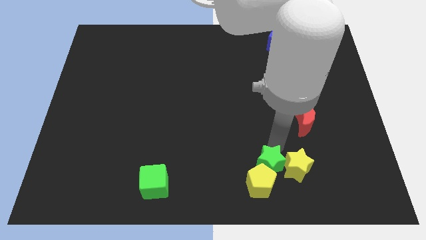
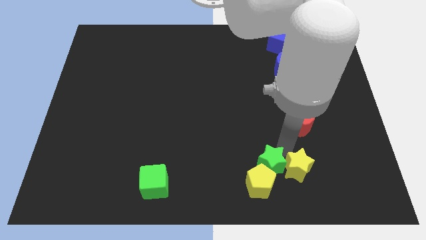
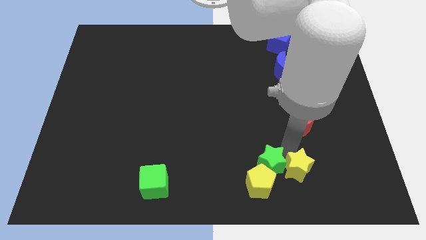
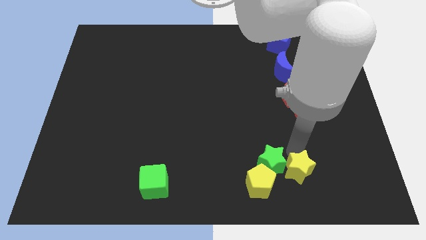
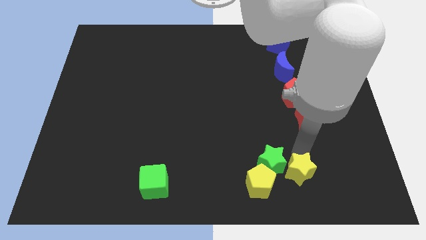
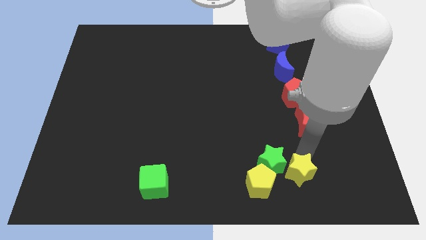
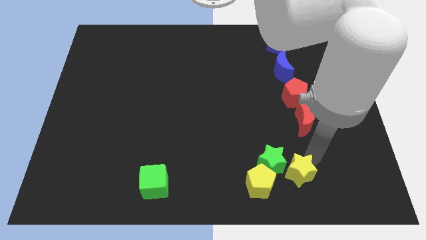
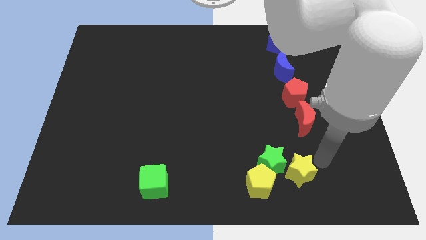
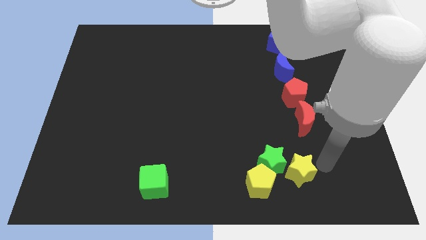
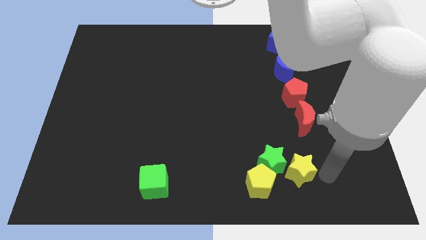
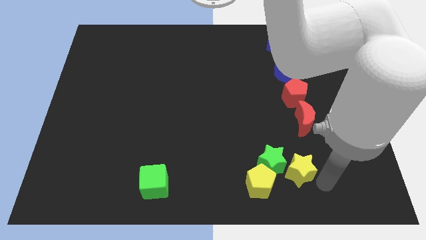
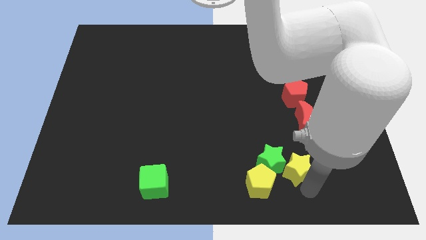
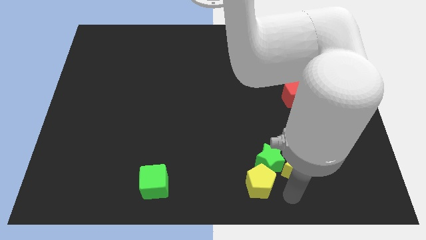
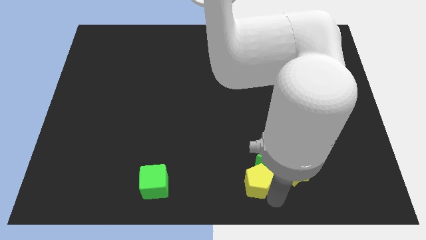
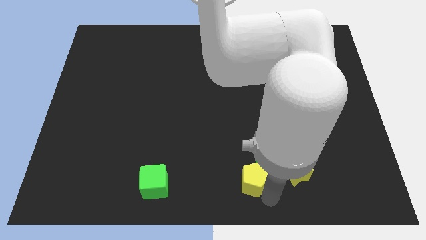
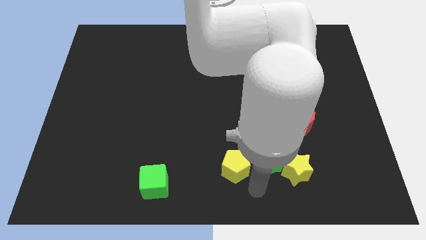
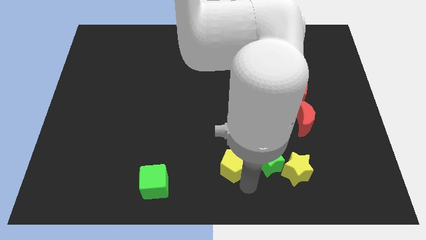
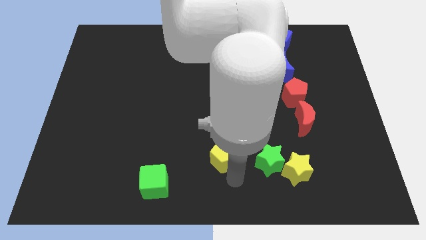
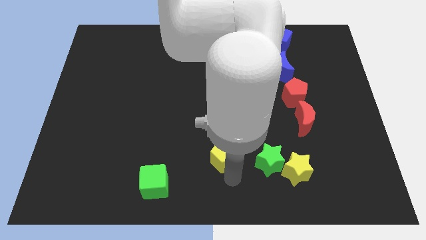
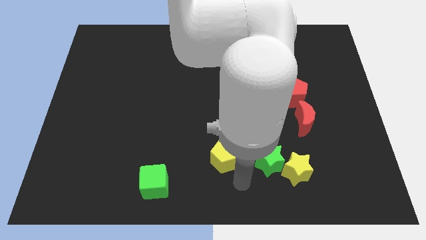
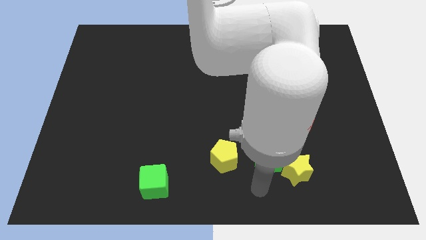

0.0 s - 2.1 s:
move the yellow pentagon at the left side of the green star

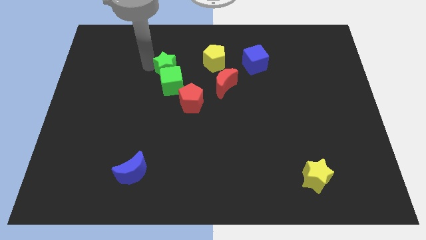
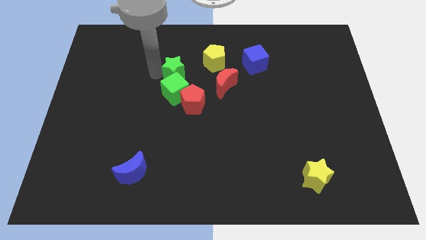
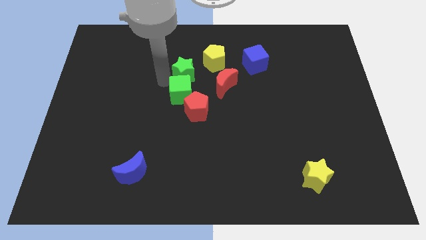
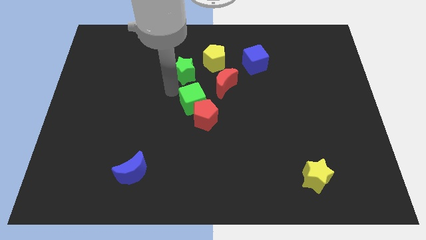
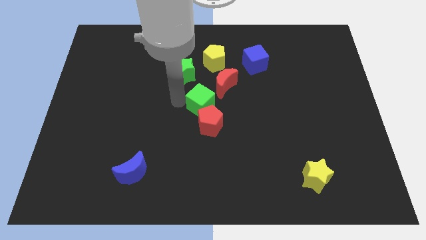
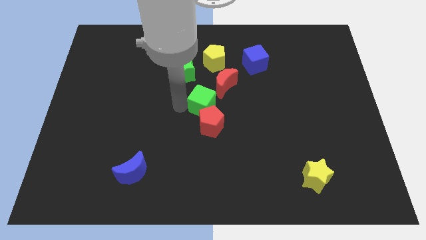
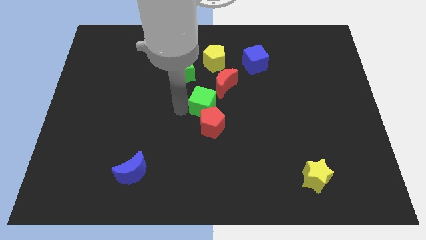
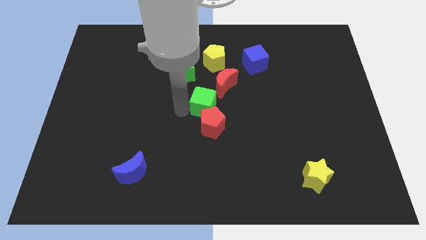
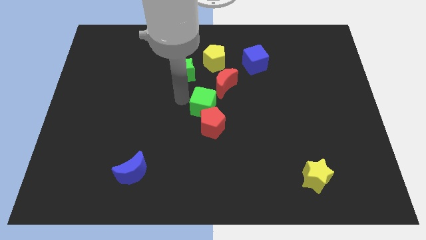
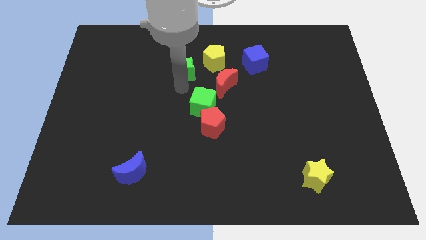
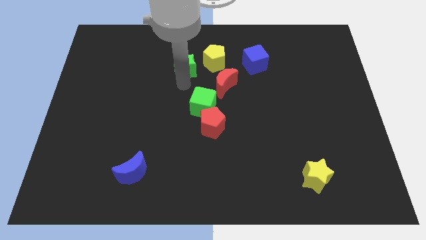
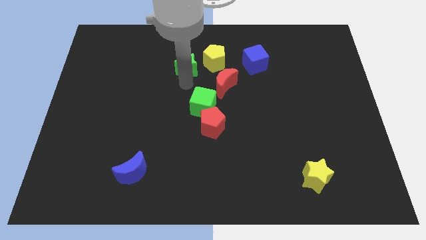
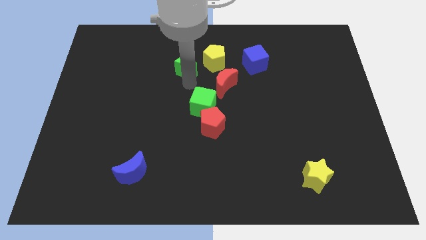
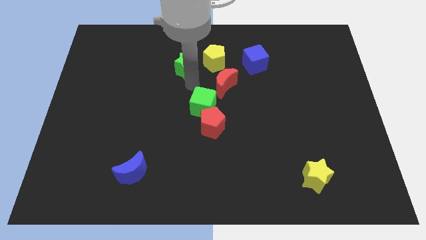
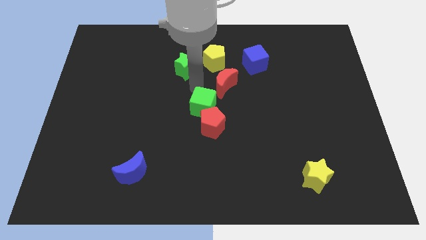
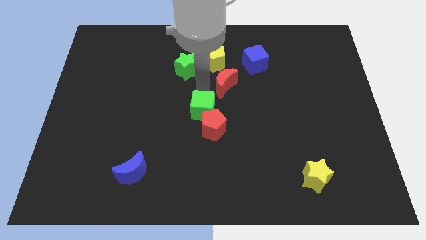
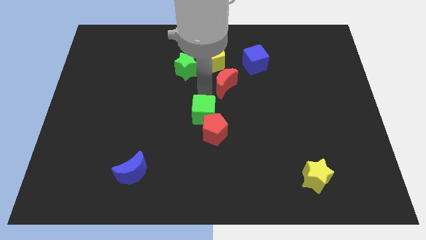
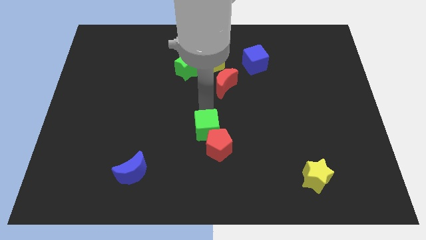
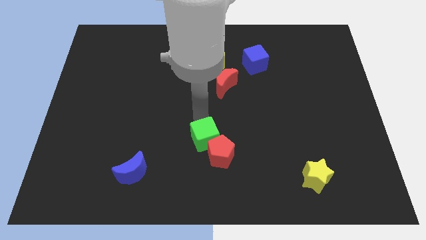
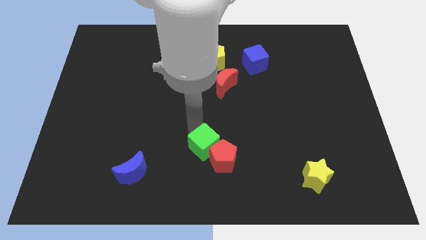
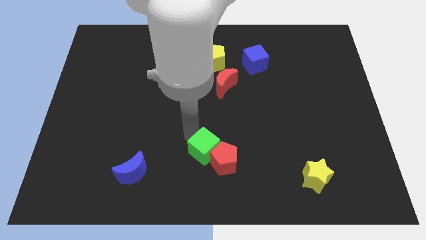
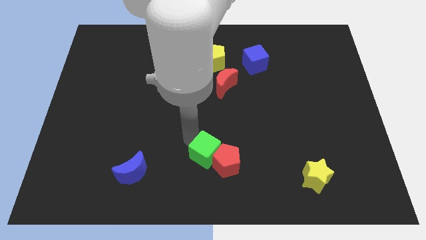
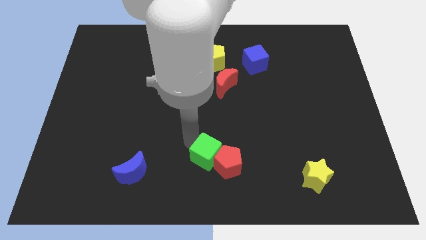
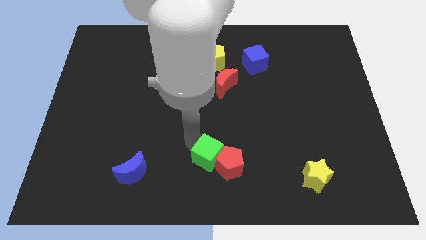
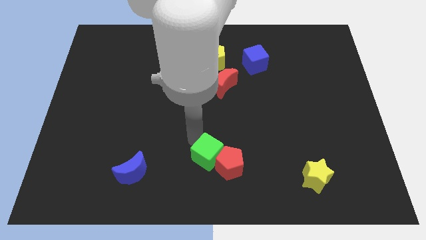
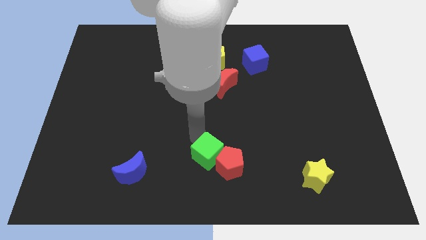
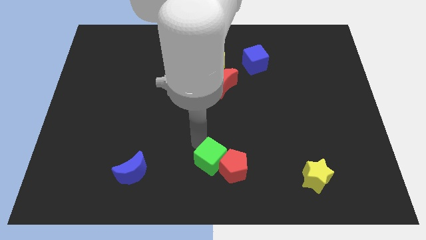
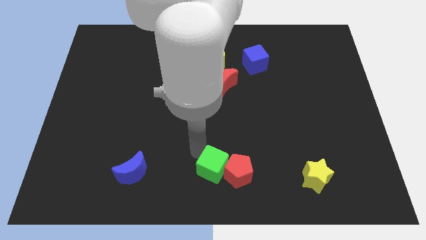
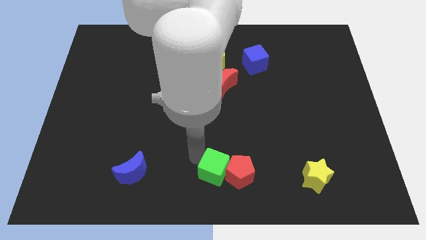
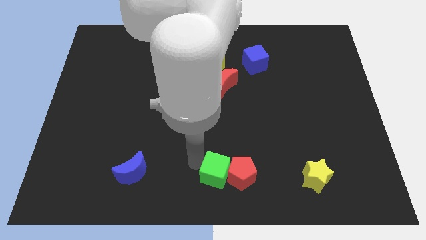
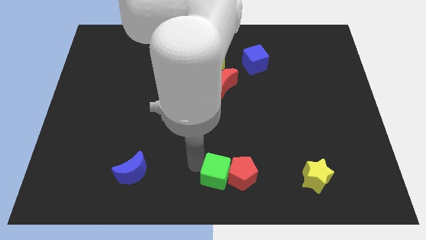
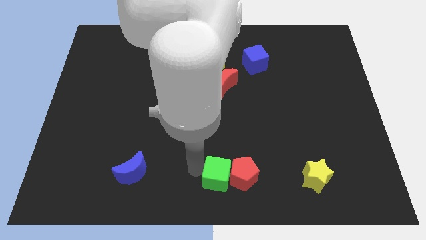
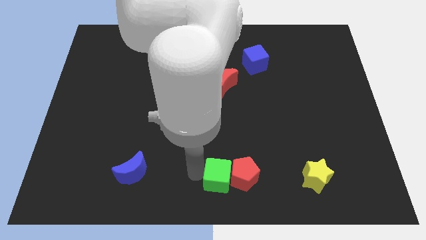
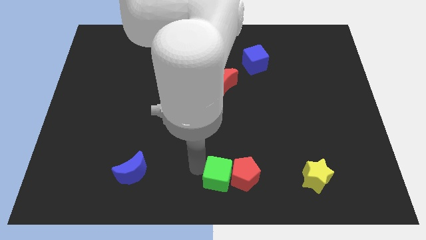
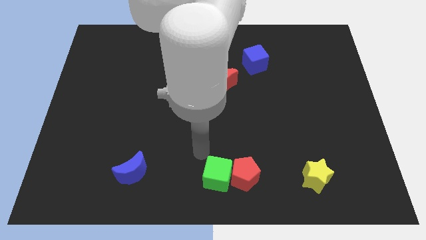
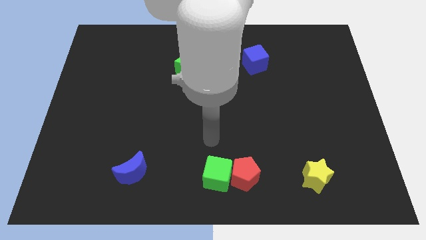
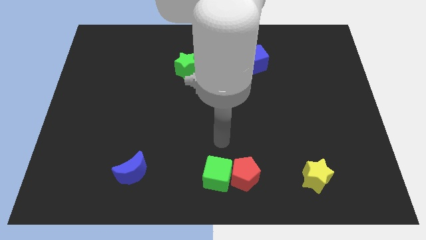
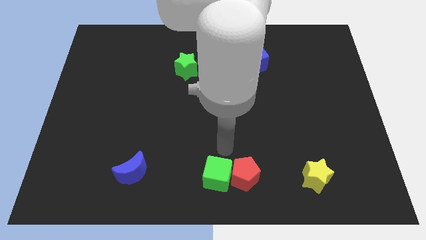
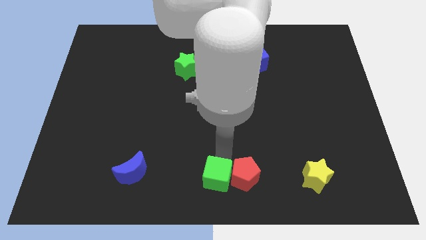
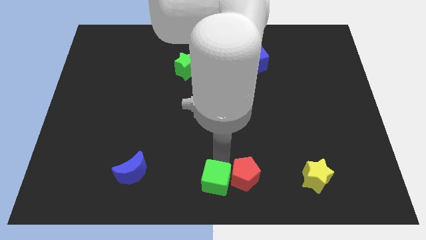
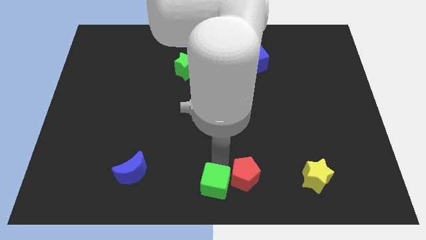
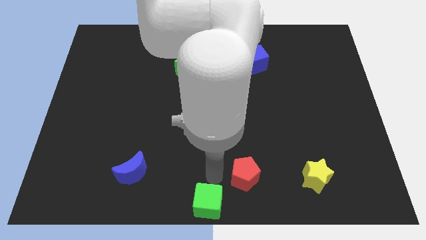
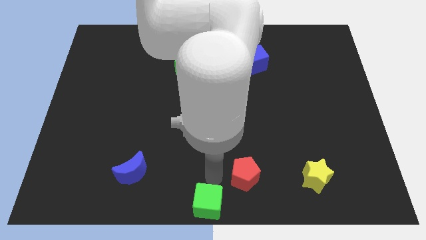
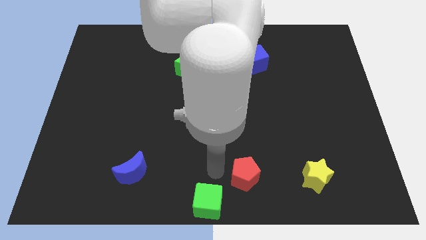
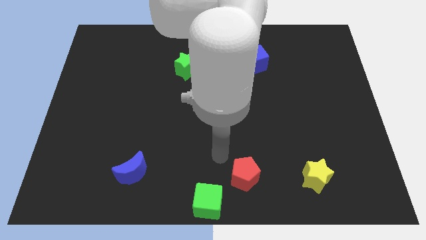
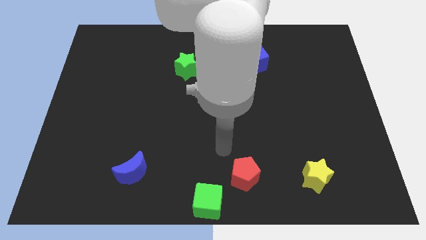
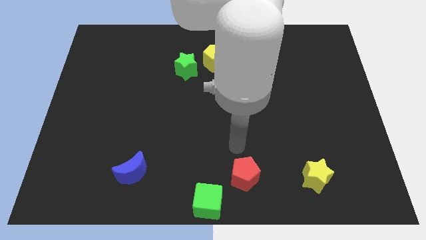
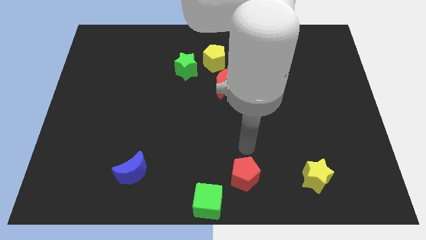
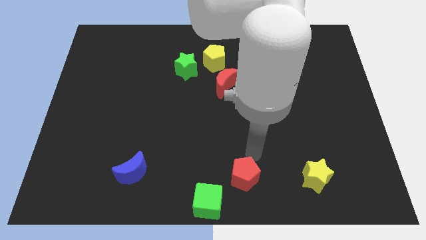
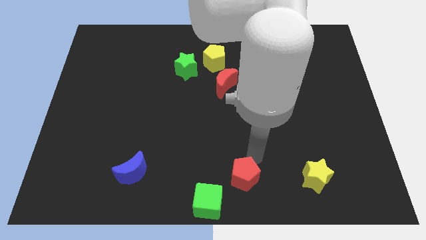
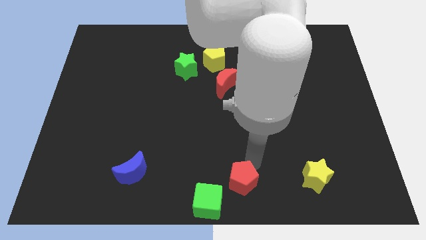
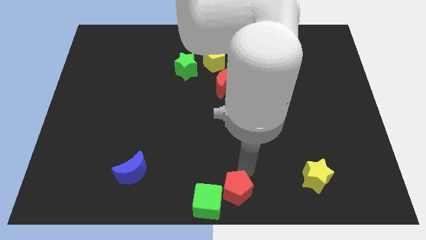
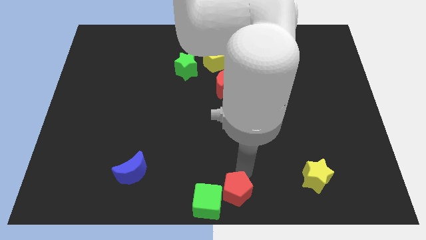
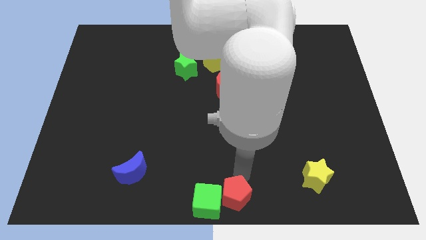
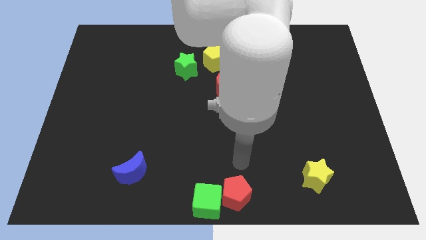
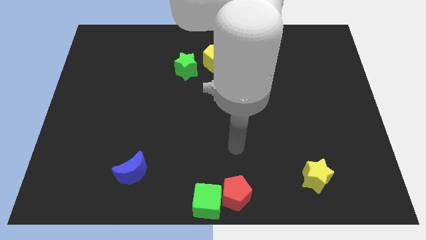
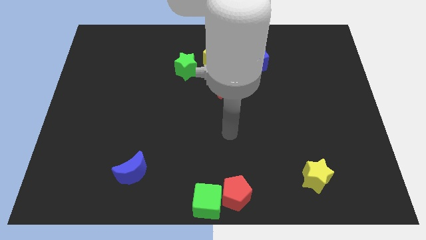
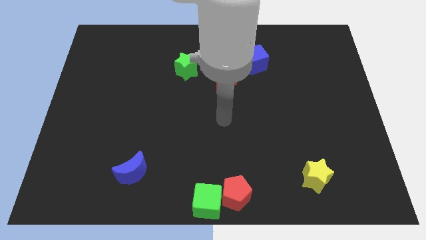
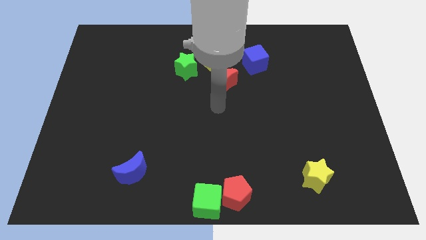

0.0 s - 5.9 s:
push the red pentagon with the green cube diagonally bottom right to the blue moon

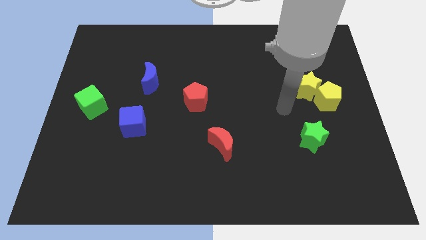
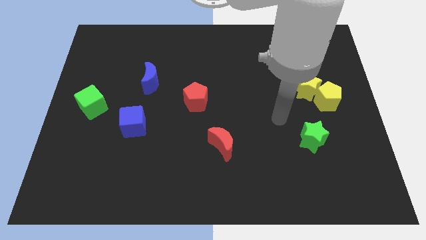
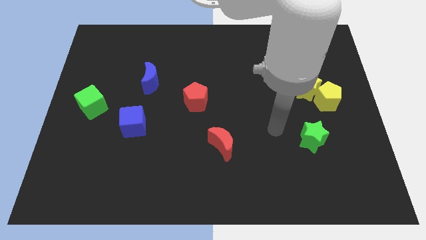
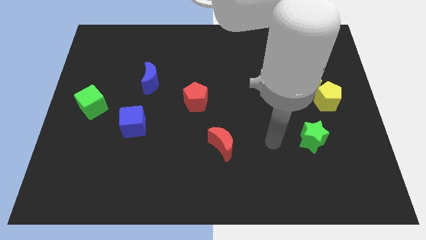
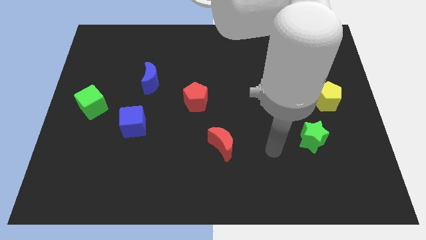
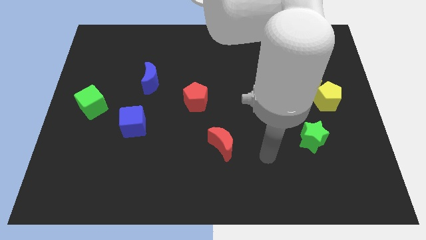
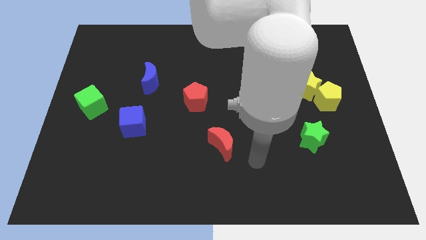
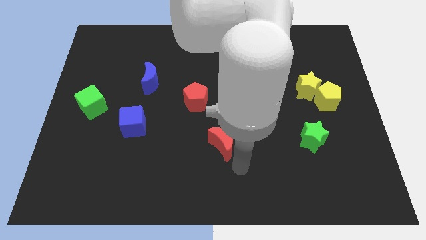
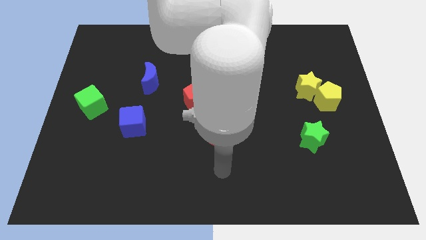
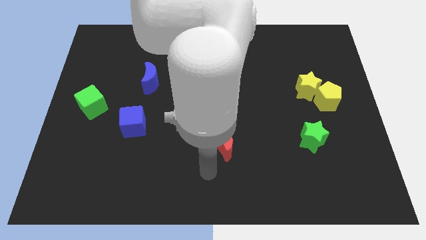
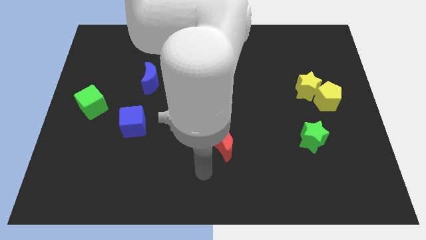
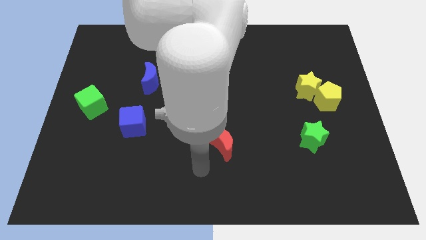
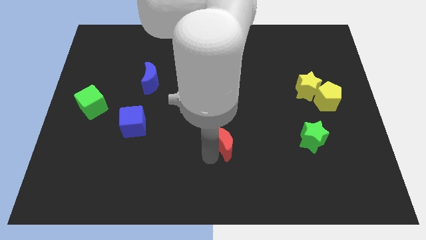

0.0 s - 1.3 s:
move your arm below the red crescent
